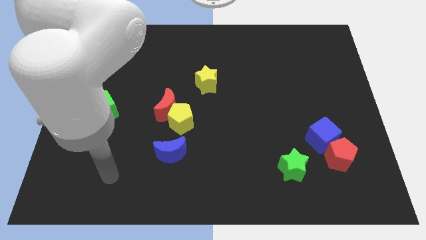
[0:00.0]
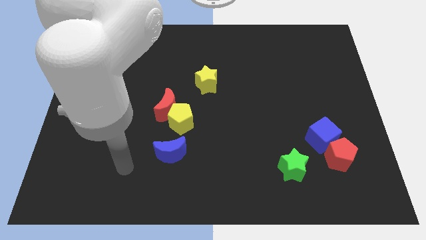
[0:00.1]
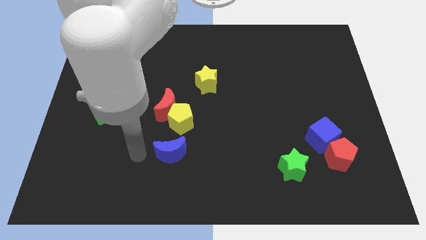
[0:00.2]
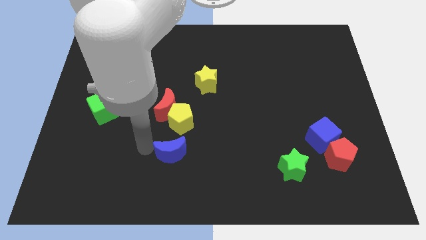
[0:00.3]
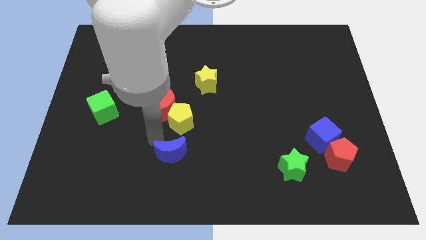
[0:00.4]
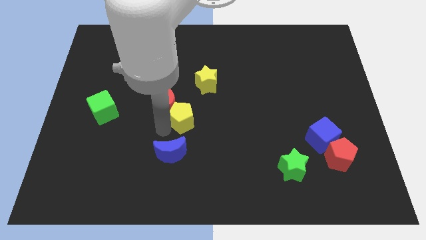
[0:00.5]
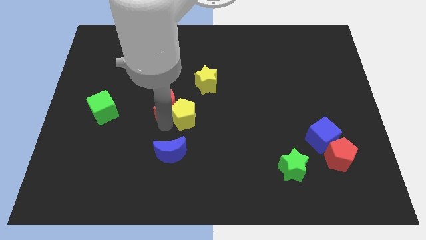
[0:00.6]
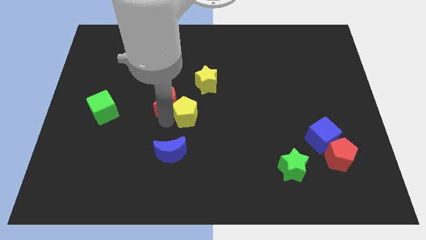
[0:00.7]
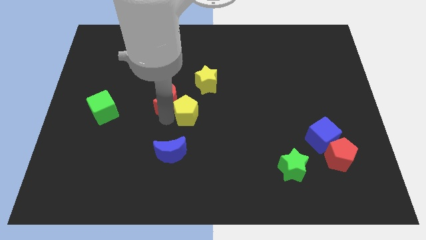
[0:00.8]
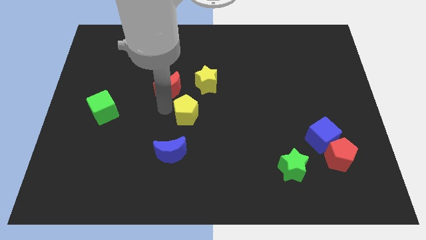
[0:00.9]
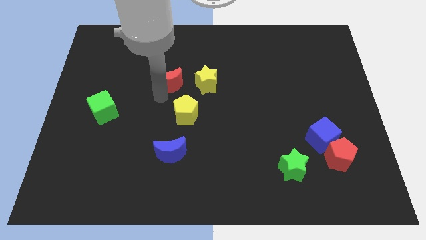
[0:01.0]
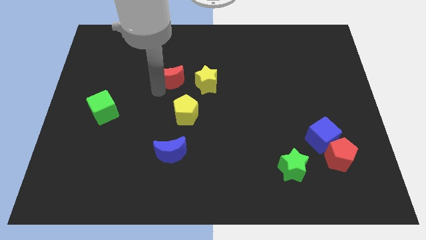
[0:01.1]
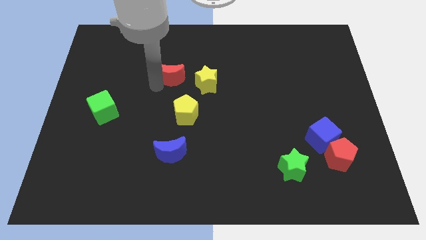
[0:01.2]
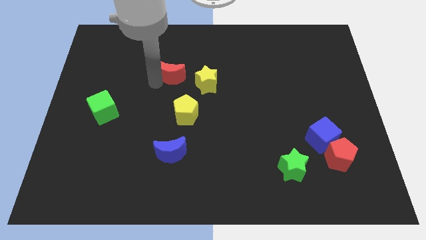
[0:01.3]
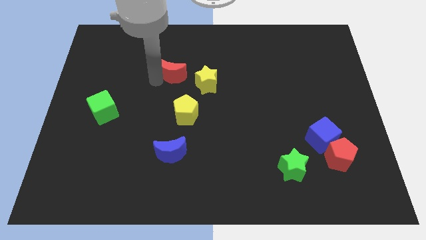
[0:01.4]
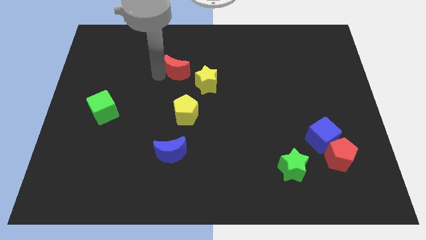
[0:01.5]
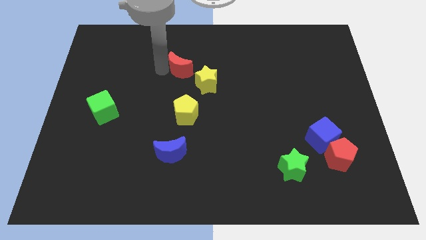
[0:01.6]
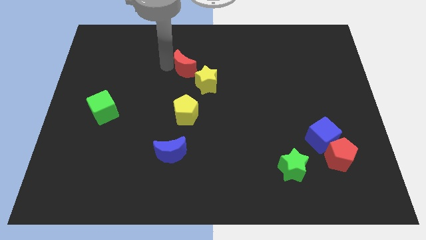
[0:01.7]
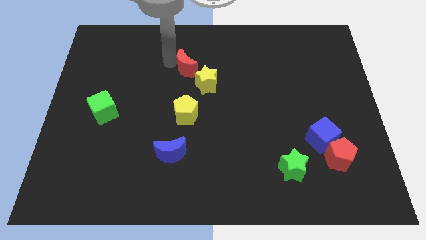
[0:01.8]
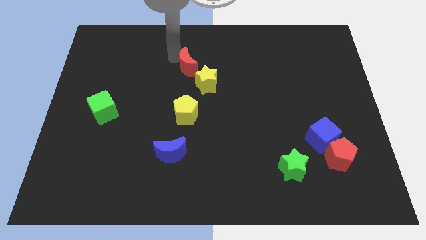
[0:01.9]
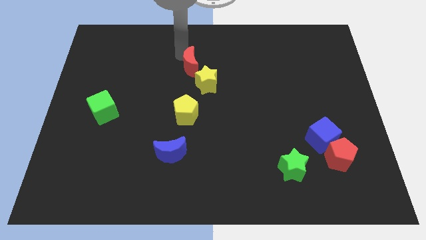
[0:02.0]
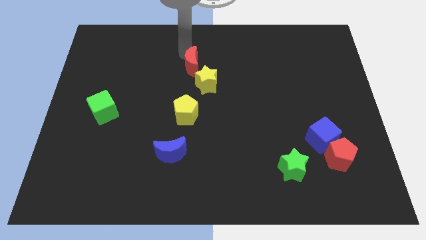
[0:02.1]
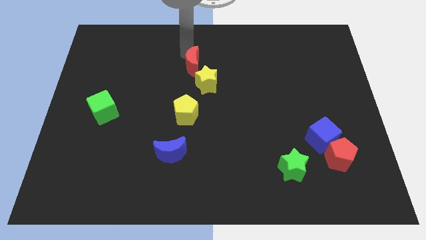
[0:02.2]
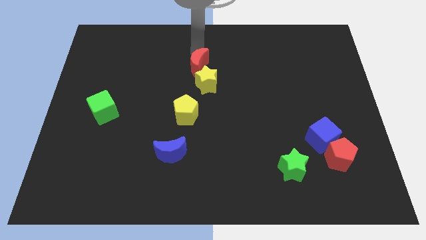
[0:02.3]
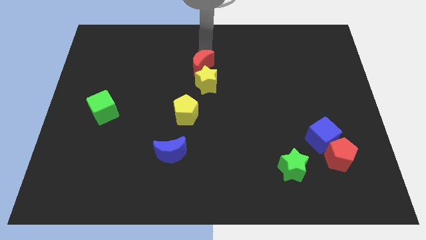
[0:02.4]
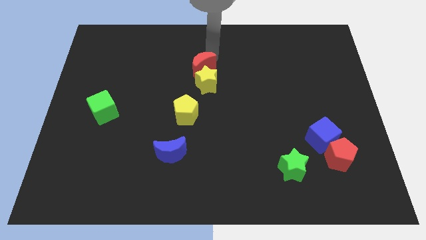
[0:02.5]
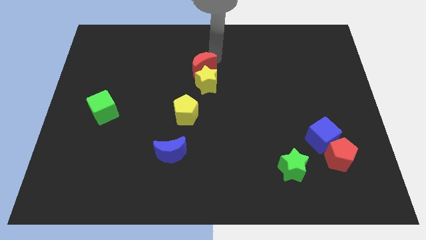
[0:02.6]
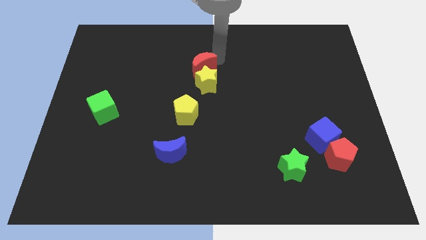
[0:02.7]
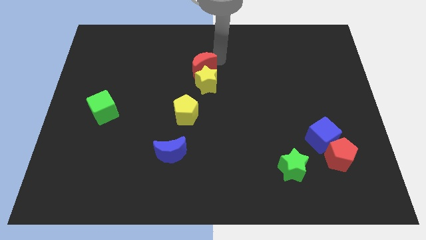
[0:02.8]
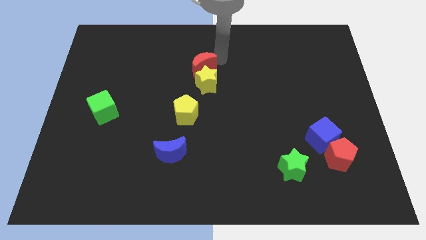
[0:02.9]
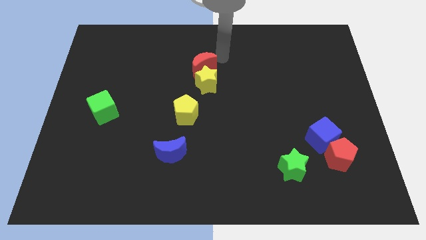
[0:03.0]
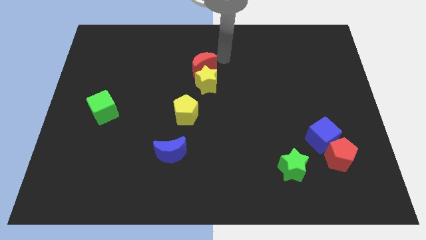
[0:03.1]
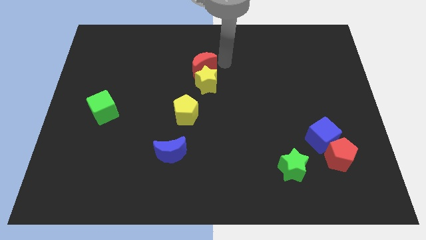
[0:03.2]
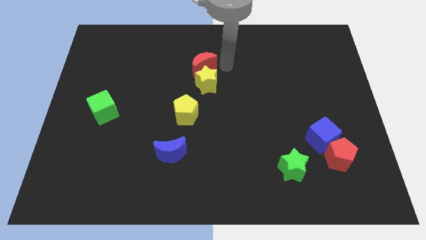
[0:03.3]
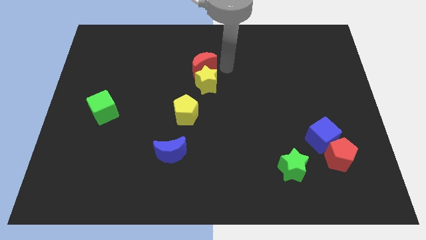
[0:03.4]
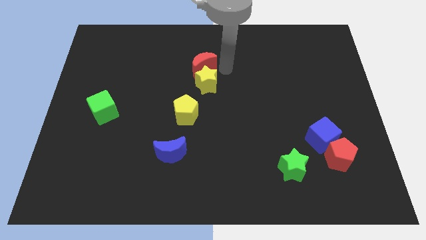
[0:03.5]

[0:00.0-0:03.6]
move the red crescent to the top left of the yellow star

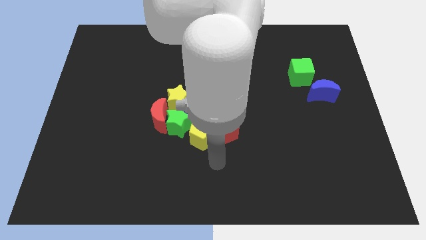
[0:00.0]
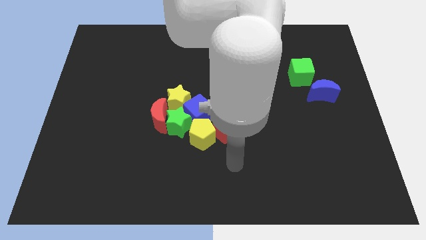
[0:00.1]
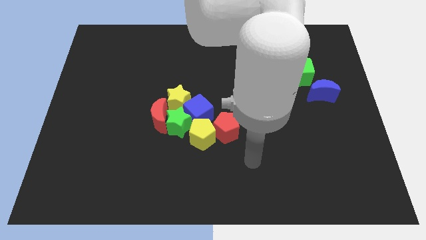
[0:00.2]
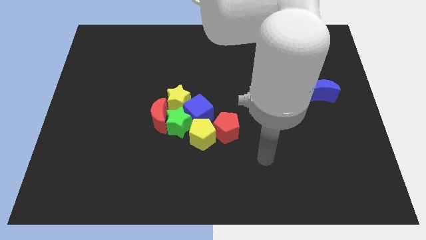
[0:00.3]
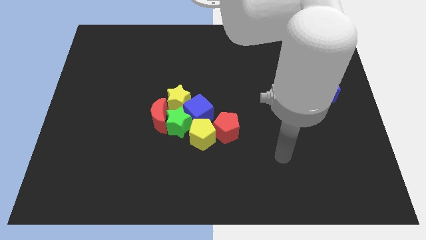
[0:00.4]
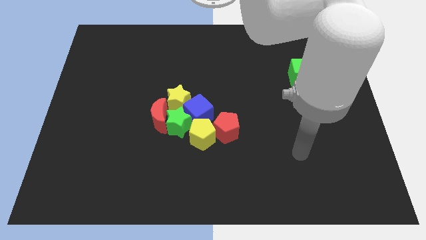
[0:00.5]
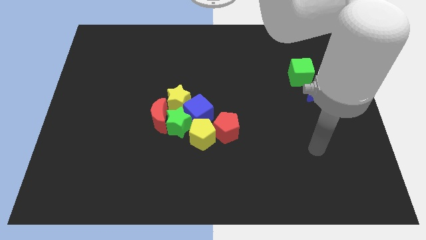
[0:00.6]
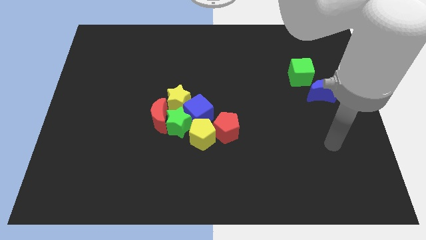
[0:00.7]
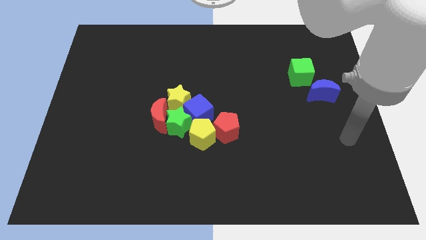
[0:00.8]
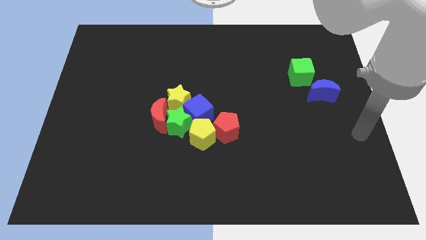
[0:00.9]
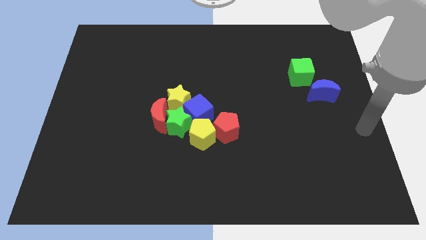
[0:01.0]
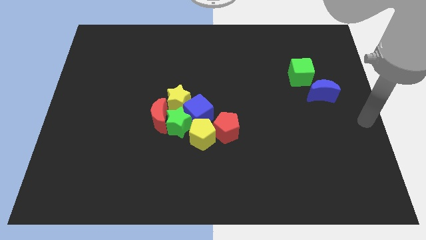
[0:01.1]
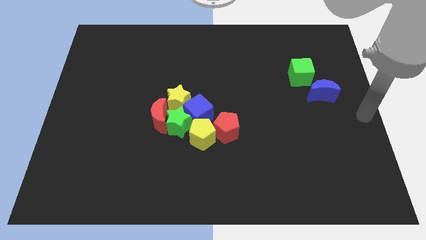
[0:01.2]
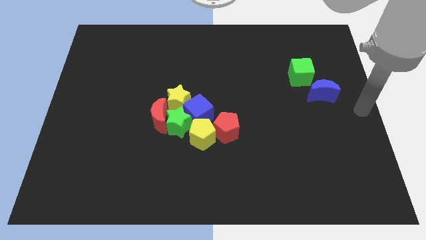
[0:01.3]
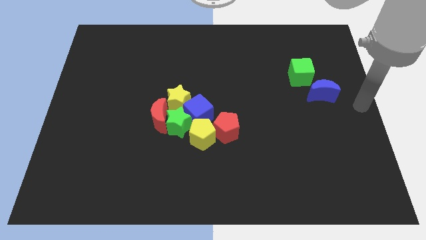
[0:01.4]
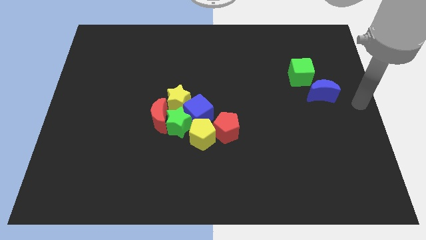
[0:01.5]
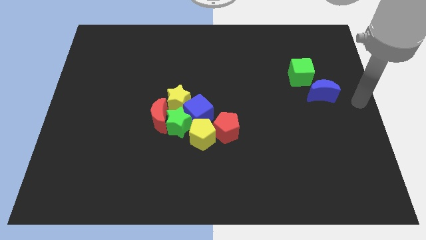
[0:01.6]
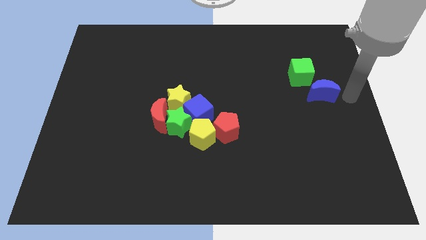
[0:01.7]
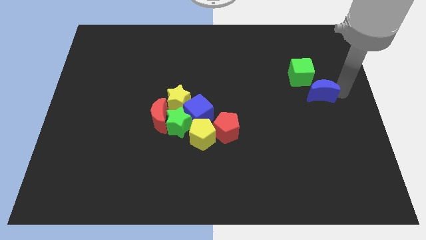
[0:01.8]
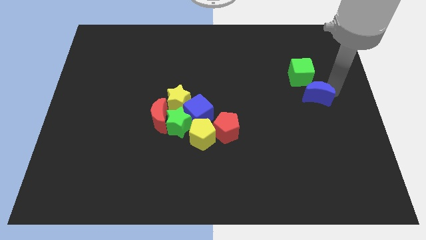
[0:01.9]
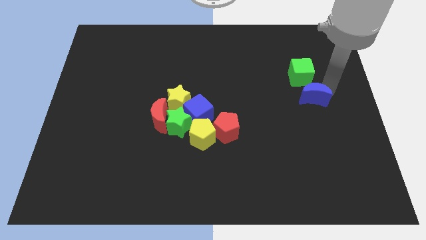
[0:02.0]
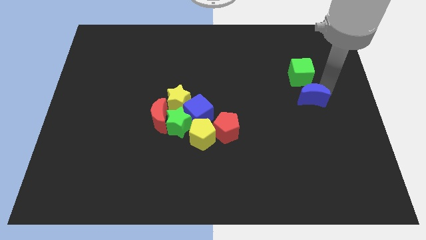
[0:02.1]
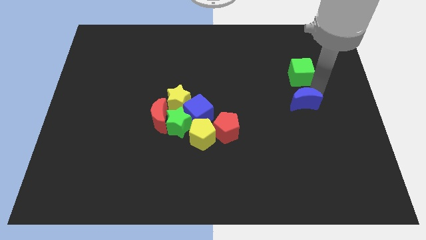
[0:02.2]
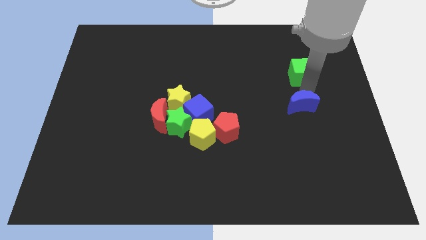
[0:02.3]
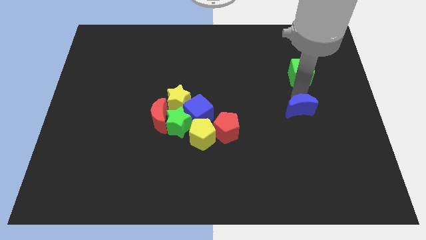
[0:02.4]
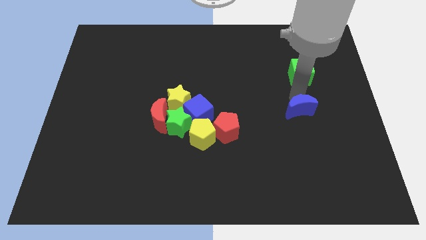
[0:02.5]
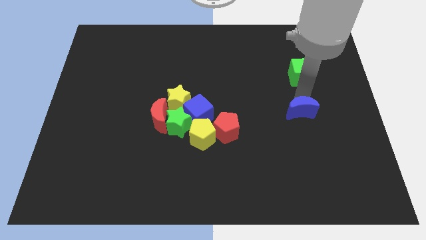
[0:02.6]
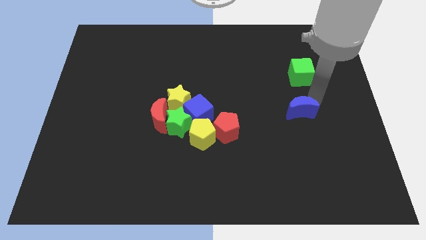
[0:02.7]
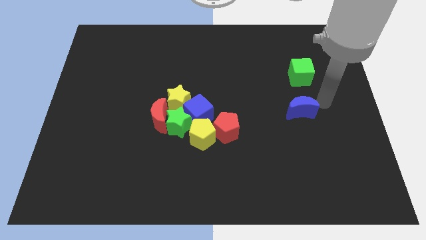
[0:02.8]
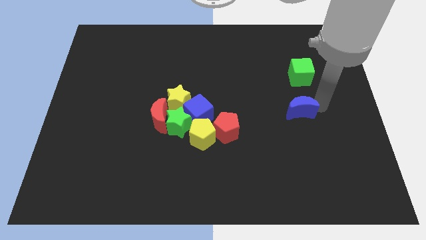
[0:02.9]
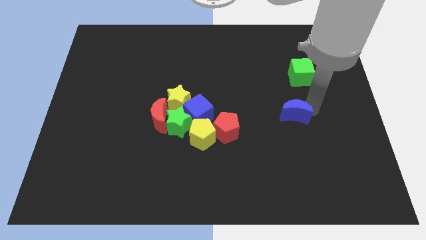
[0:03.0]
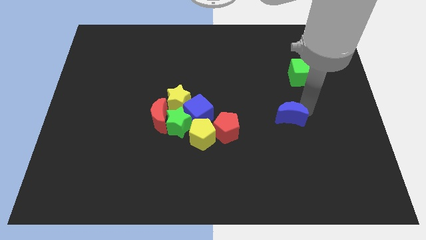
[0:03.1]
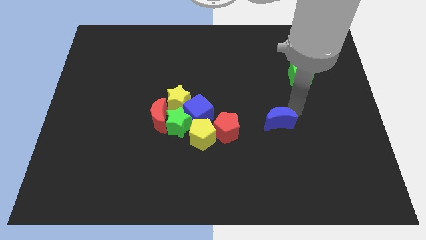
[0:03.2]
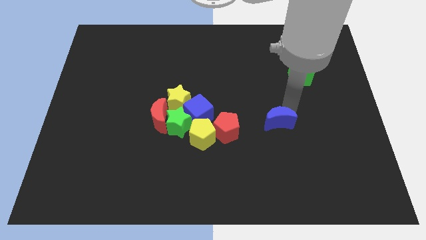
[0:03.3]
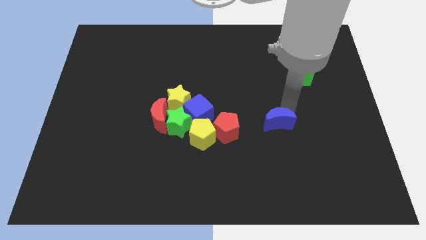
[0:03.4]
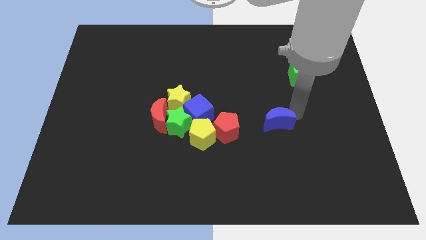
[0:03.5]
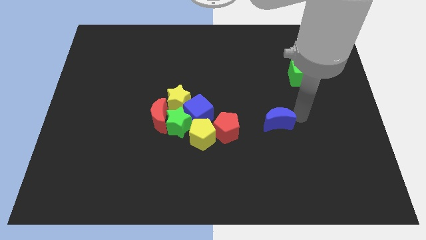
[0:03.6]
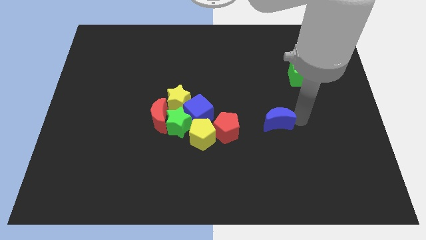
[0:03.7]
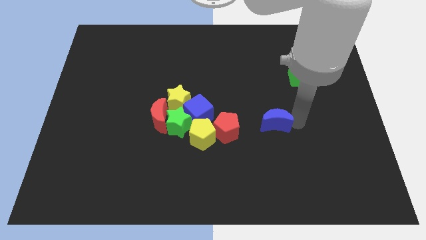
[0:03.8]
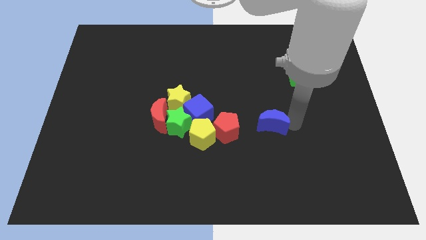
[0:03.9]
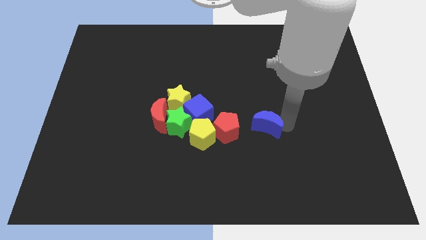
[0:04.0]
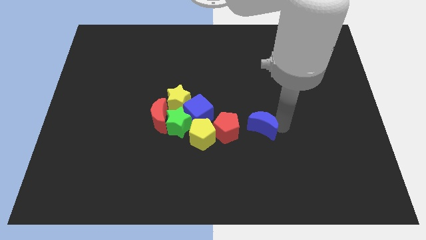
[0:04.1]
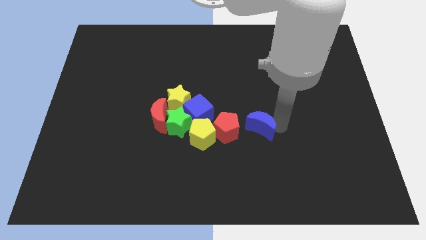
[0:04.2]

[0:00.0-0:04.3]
move the blue crescent to the right of the red pentagon

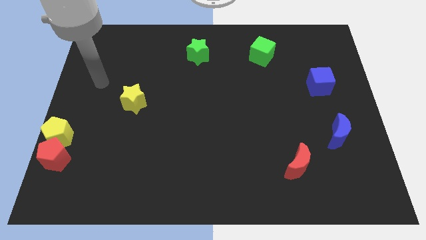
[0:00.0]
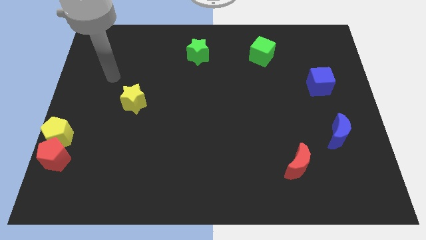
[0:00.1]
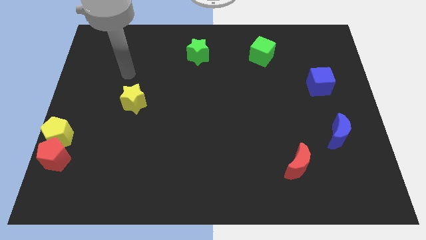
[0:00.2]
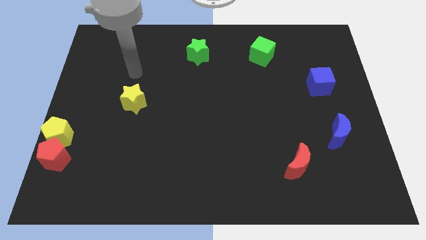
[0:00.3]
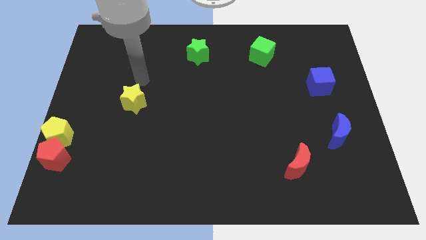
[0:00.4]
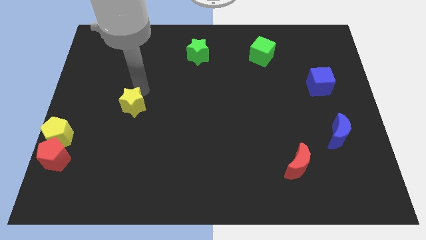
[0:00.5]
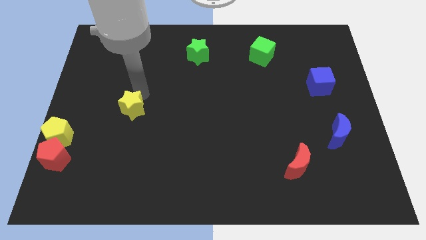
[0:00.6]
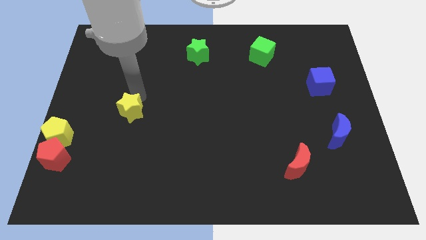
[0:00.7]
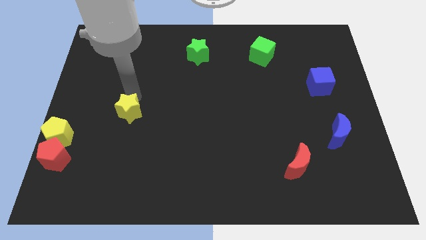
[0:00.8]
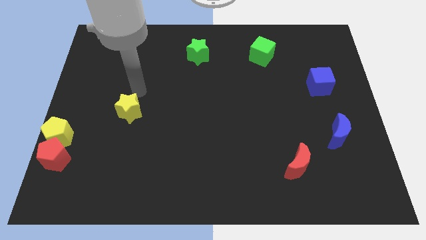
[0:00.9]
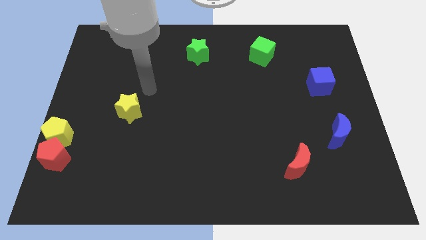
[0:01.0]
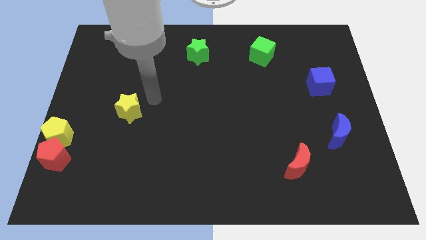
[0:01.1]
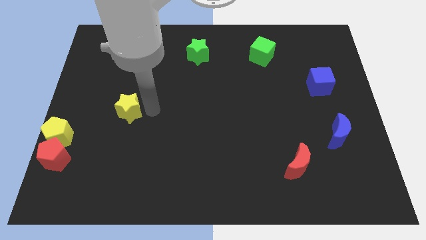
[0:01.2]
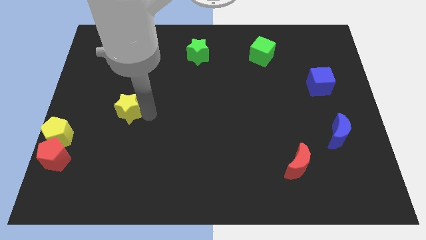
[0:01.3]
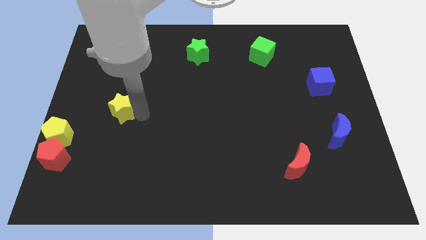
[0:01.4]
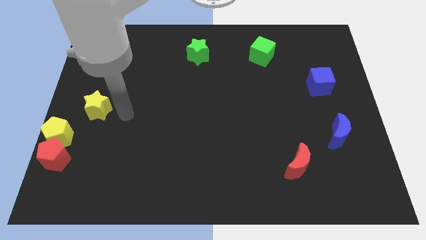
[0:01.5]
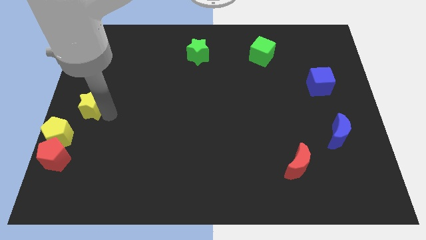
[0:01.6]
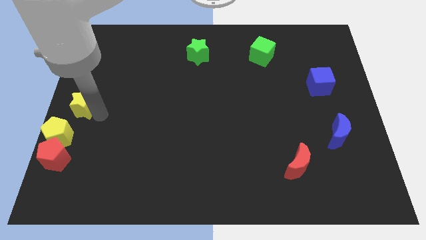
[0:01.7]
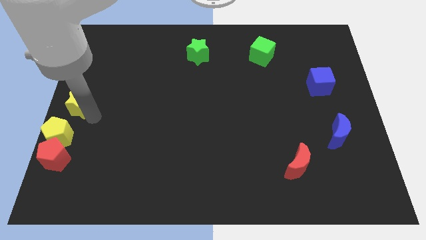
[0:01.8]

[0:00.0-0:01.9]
move yellow star right above the yellow pentagon
